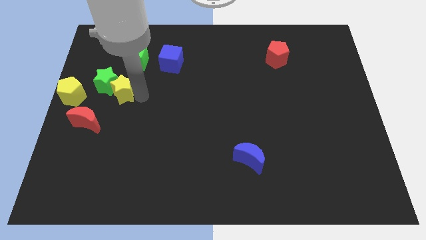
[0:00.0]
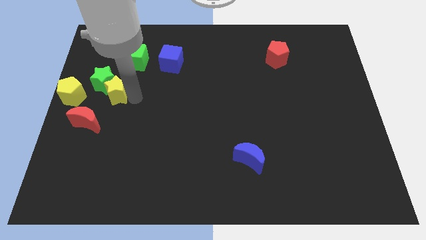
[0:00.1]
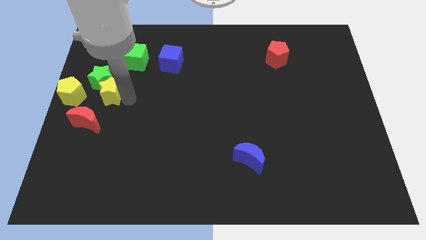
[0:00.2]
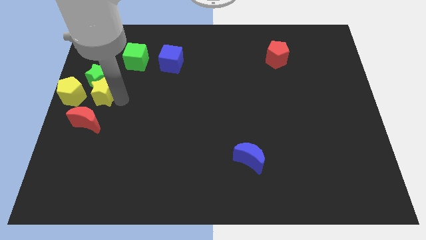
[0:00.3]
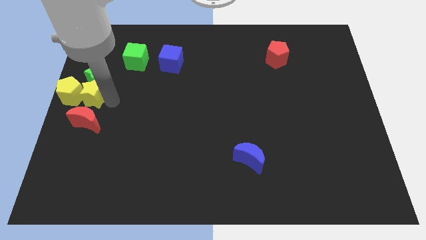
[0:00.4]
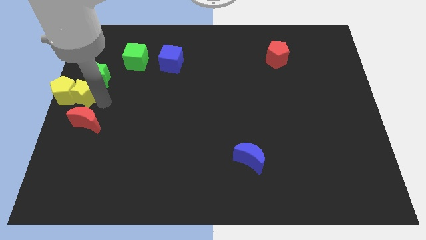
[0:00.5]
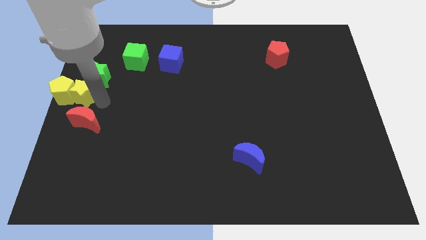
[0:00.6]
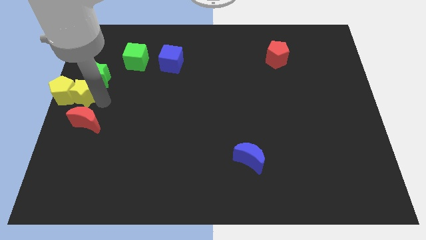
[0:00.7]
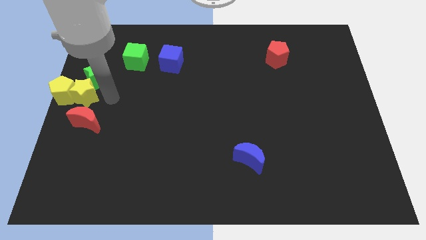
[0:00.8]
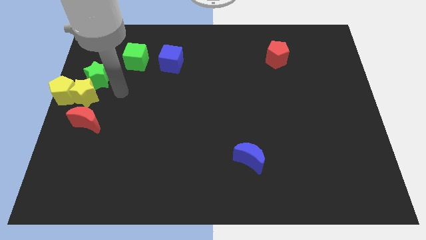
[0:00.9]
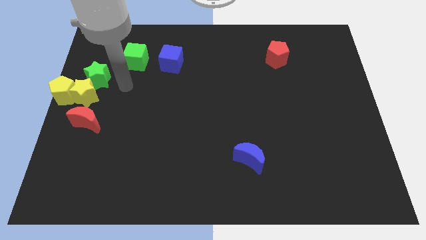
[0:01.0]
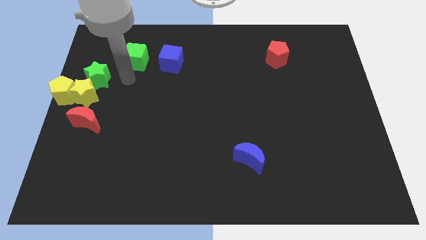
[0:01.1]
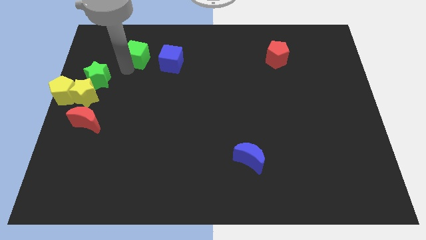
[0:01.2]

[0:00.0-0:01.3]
push the yellow star to the right of the yellow pentagon

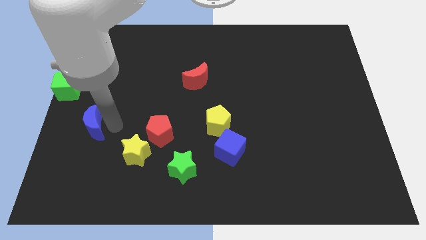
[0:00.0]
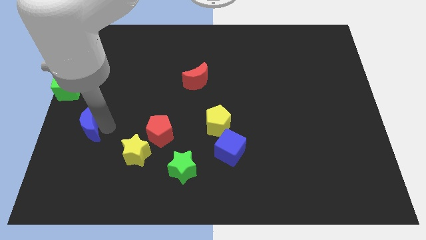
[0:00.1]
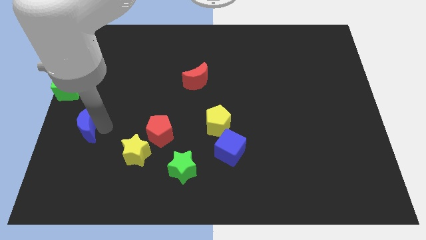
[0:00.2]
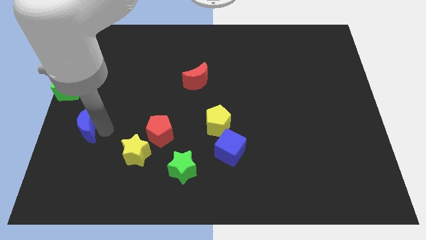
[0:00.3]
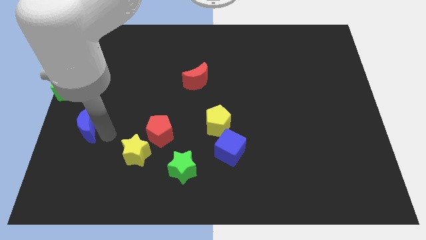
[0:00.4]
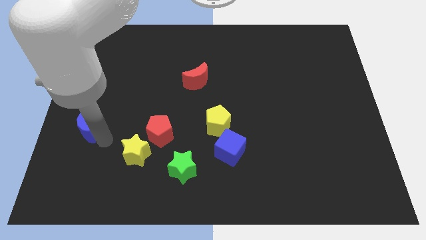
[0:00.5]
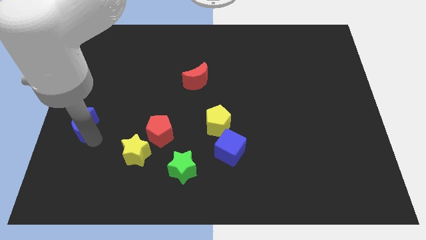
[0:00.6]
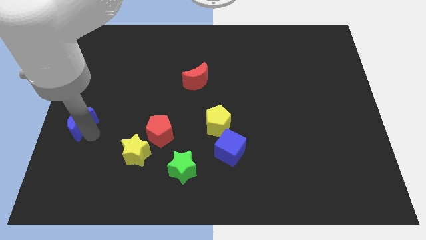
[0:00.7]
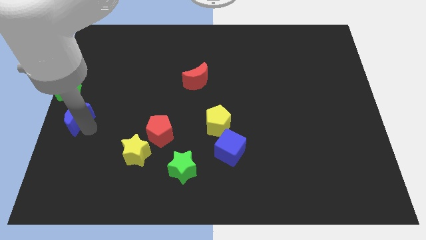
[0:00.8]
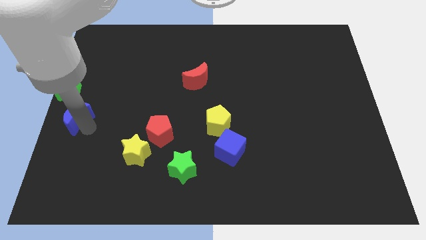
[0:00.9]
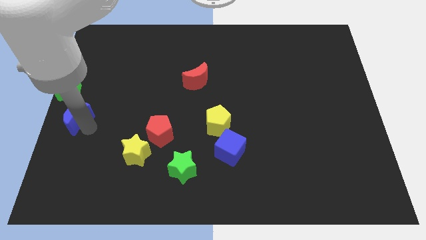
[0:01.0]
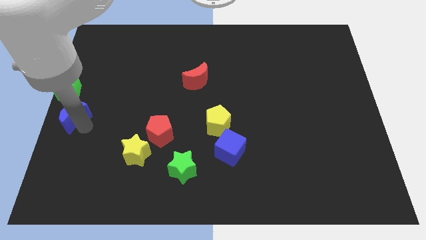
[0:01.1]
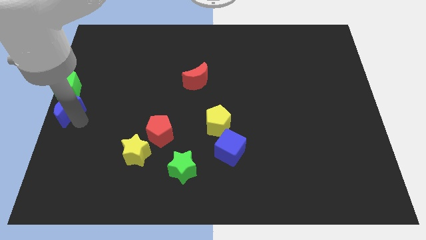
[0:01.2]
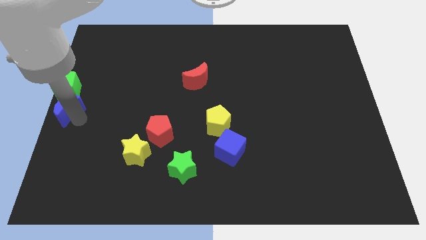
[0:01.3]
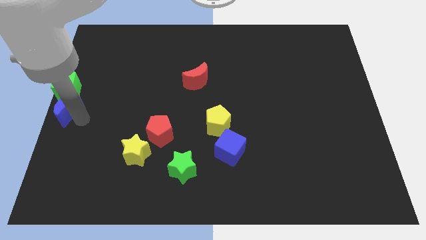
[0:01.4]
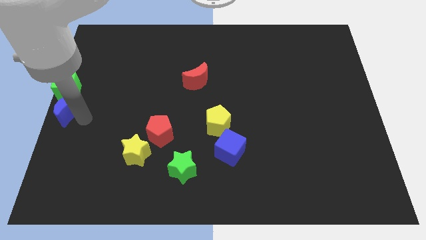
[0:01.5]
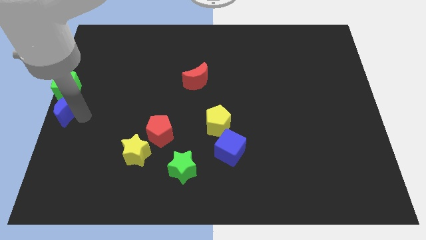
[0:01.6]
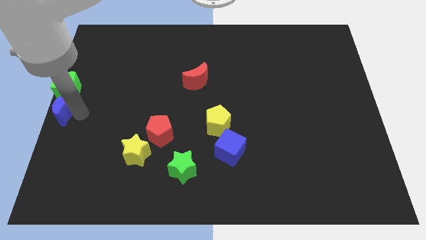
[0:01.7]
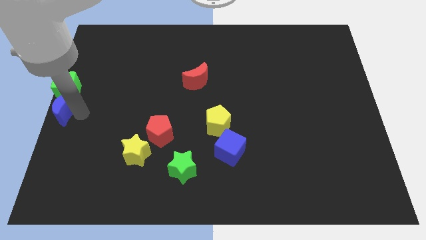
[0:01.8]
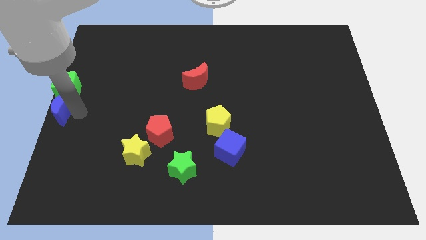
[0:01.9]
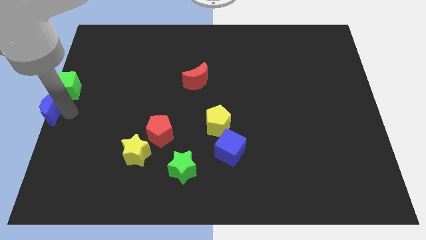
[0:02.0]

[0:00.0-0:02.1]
push the blue moon into the green cube

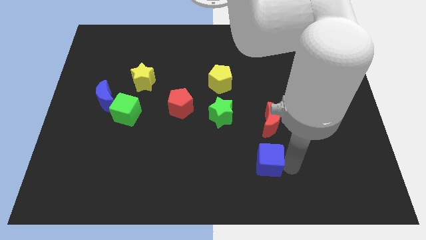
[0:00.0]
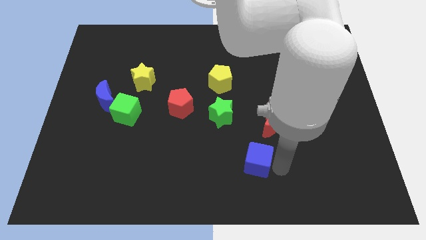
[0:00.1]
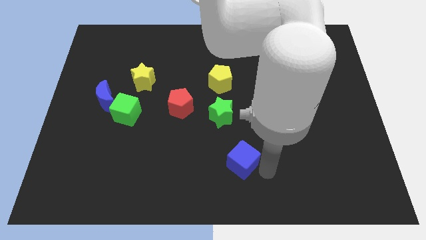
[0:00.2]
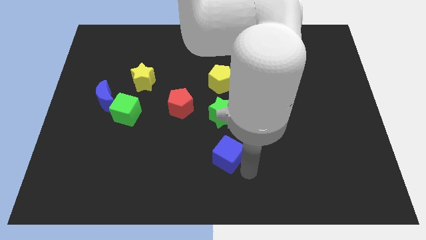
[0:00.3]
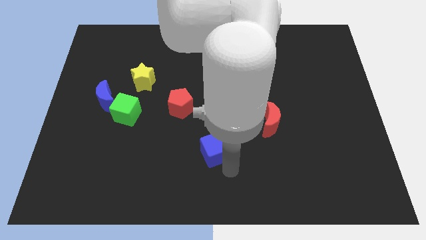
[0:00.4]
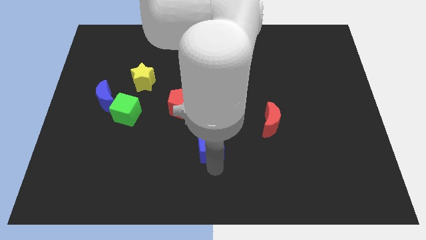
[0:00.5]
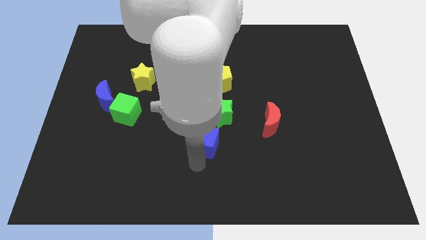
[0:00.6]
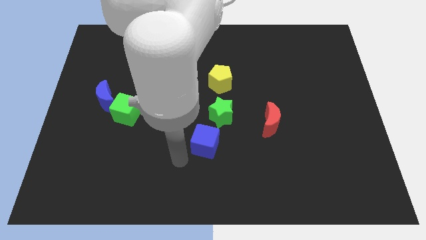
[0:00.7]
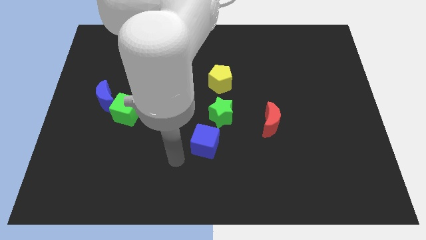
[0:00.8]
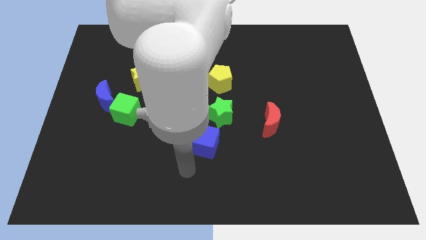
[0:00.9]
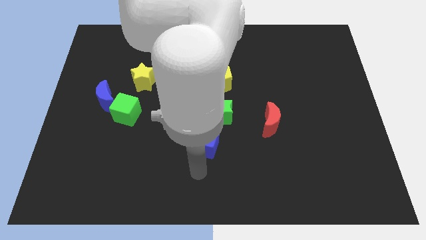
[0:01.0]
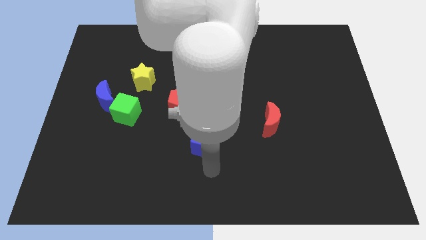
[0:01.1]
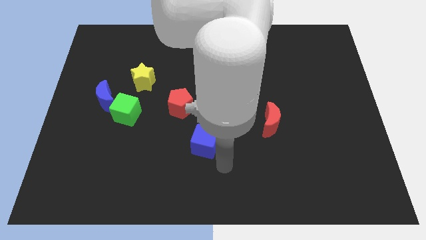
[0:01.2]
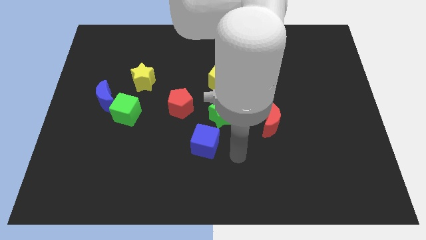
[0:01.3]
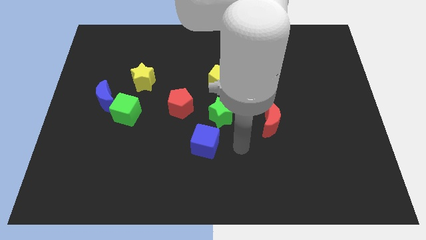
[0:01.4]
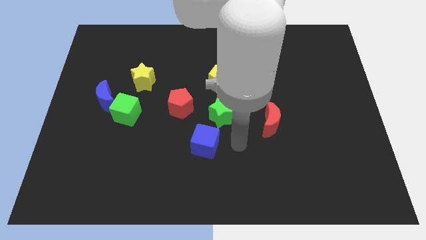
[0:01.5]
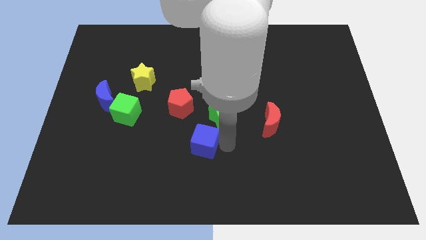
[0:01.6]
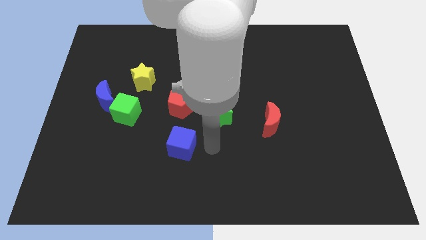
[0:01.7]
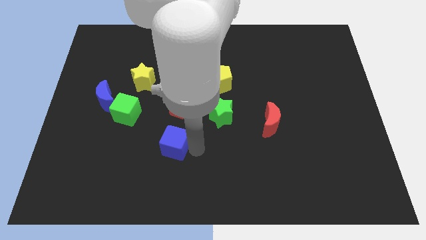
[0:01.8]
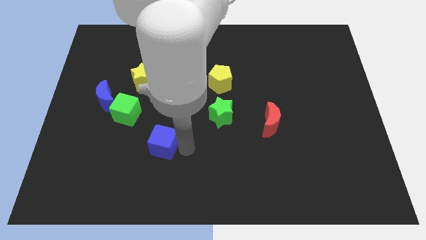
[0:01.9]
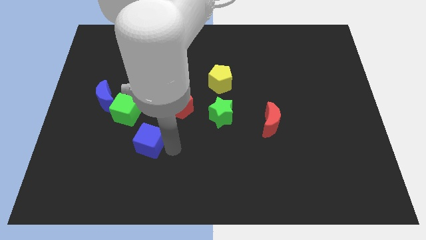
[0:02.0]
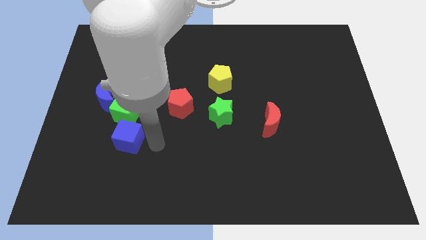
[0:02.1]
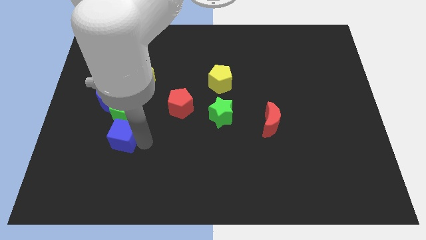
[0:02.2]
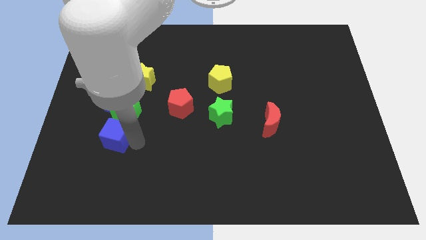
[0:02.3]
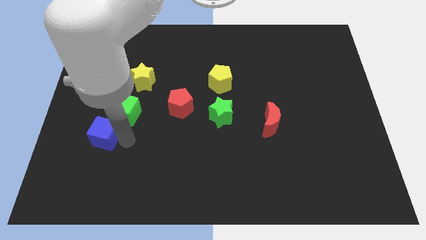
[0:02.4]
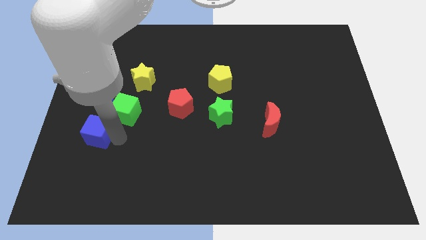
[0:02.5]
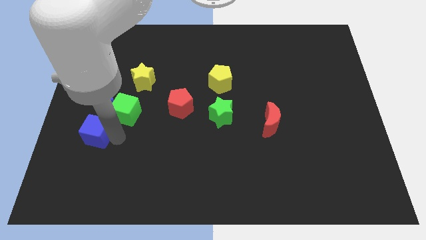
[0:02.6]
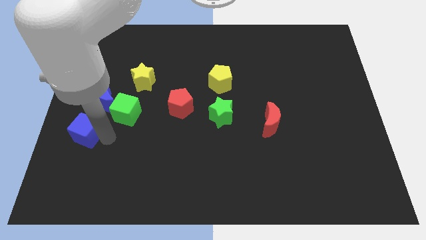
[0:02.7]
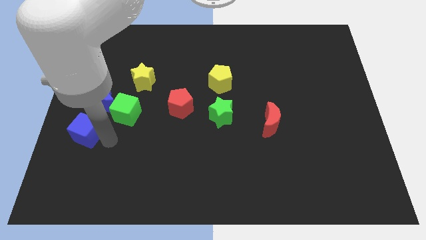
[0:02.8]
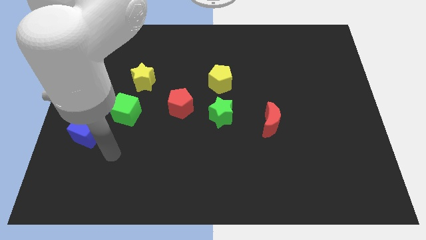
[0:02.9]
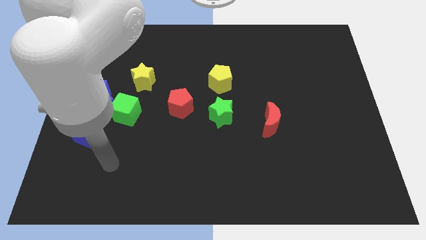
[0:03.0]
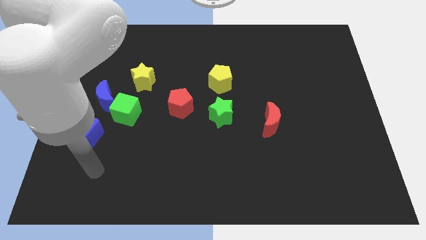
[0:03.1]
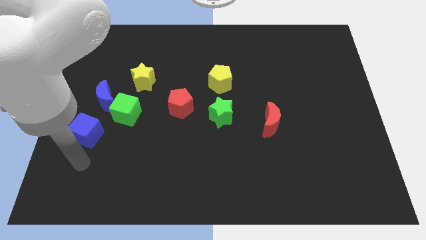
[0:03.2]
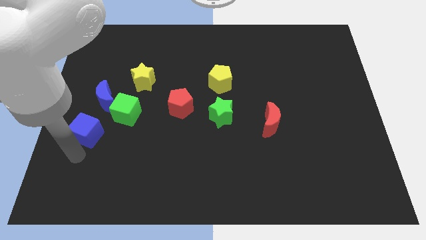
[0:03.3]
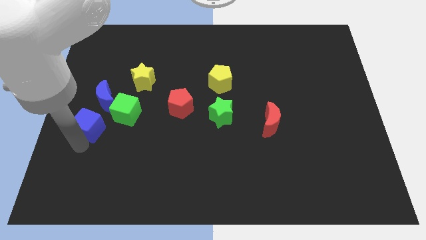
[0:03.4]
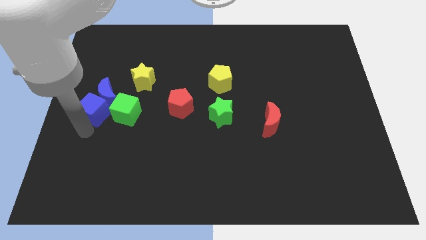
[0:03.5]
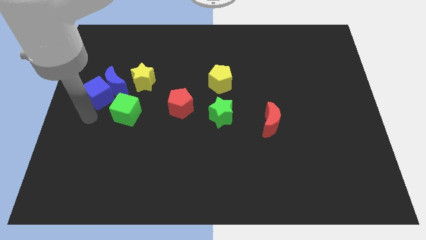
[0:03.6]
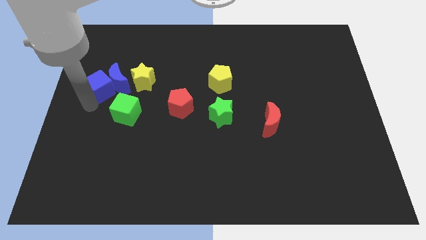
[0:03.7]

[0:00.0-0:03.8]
push the blue cube into the blue crescent

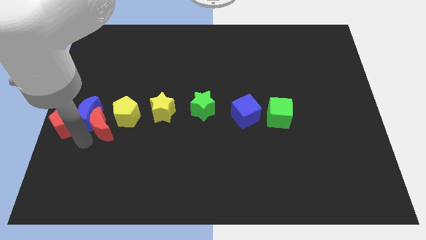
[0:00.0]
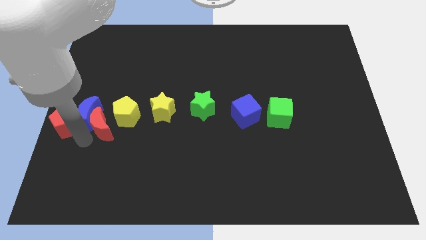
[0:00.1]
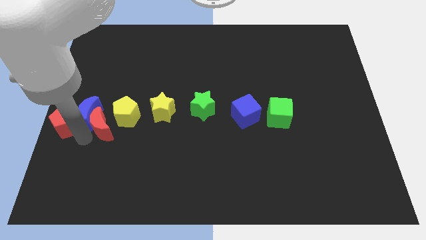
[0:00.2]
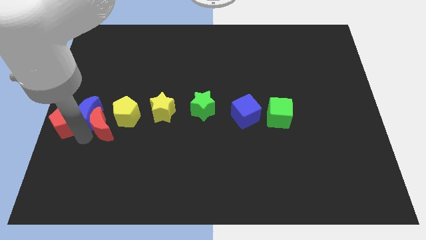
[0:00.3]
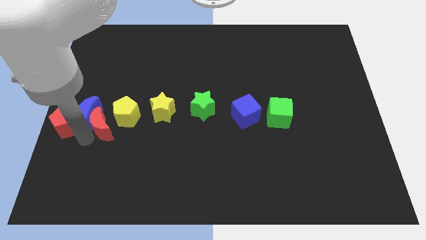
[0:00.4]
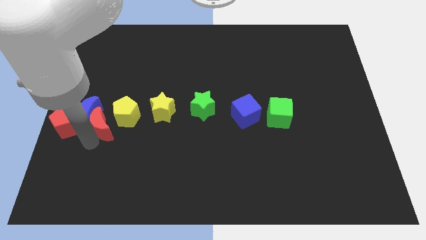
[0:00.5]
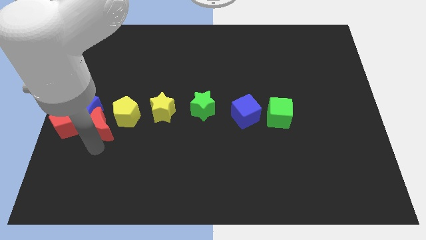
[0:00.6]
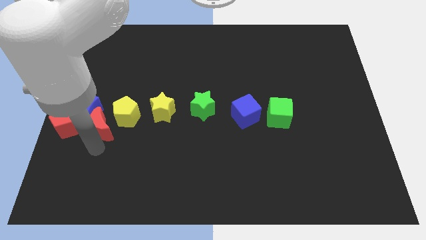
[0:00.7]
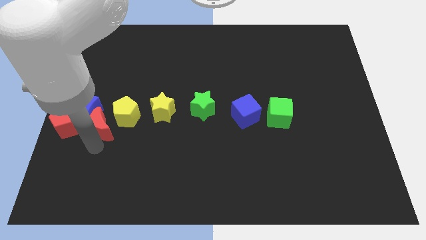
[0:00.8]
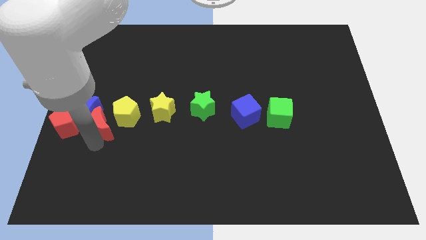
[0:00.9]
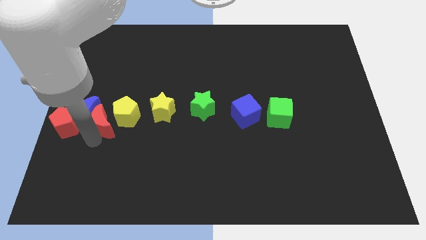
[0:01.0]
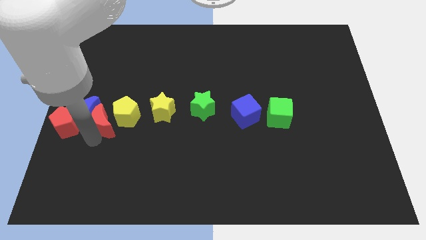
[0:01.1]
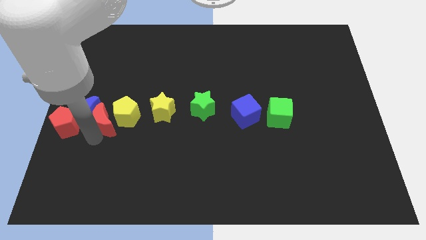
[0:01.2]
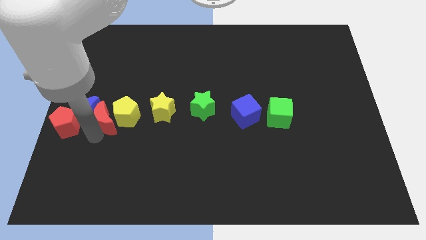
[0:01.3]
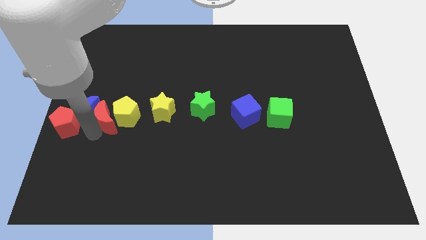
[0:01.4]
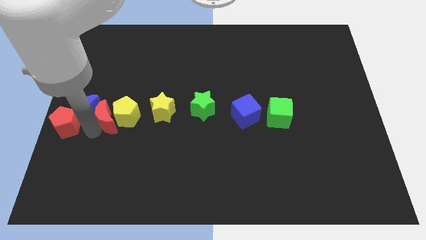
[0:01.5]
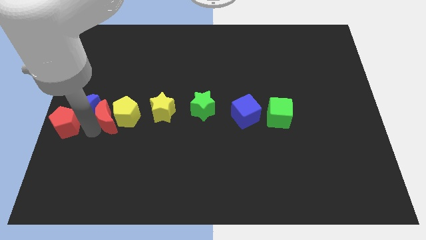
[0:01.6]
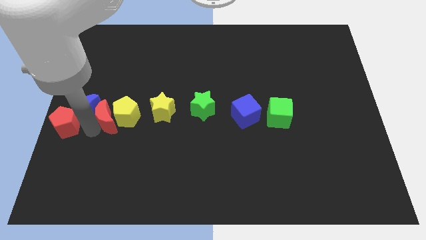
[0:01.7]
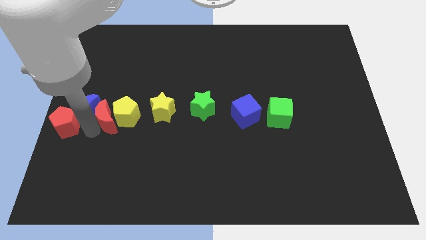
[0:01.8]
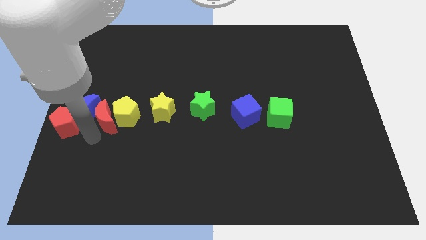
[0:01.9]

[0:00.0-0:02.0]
move the red moon left beside the yellow pentagon
